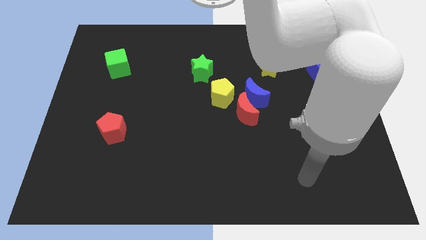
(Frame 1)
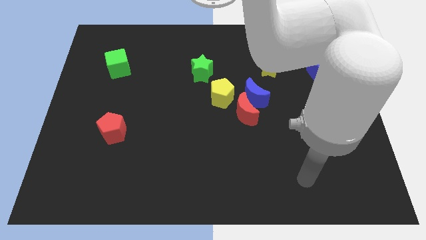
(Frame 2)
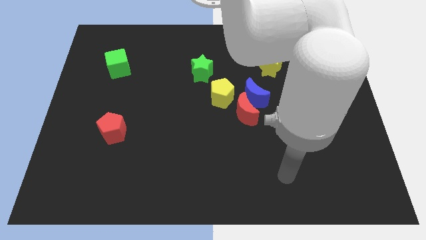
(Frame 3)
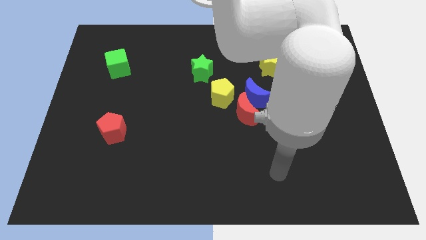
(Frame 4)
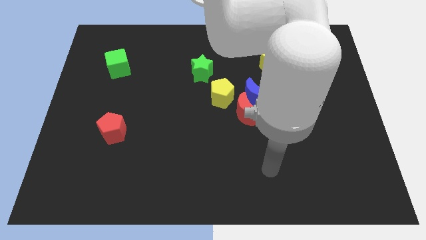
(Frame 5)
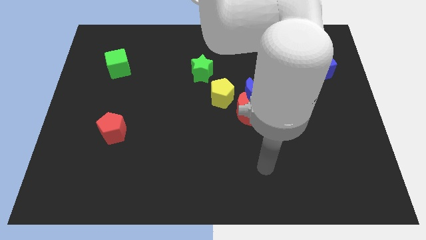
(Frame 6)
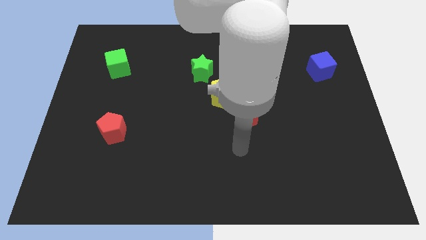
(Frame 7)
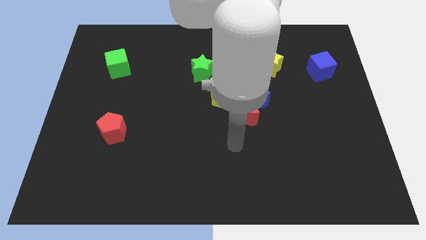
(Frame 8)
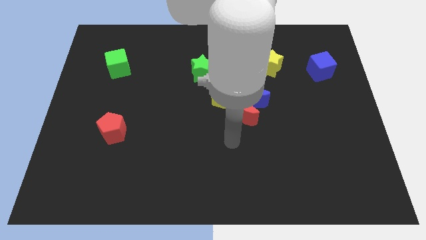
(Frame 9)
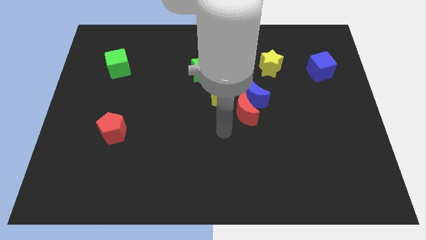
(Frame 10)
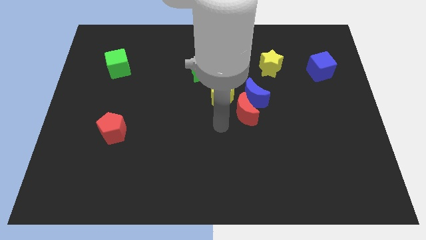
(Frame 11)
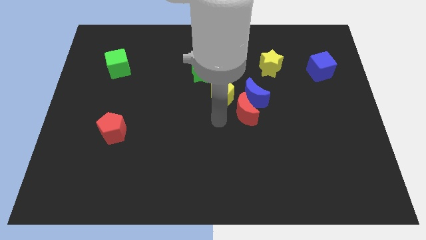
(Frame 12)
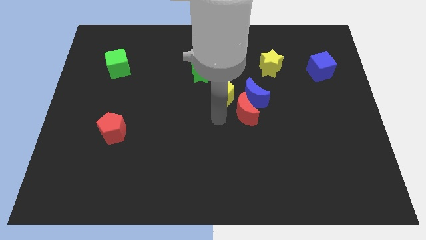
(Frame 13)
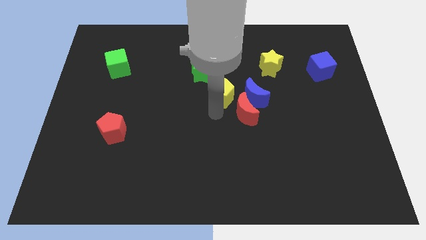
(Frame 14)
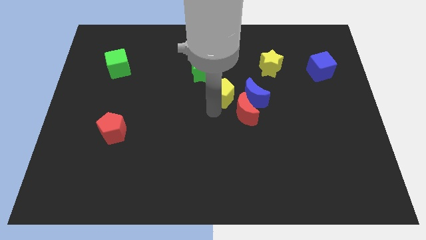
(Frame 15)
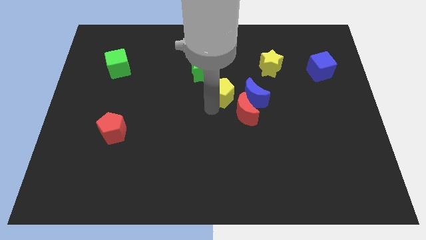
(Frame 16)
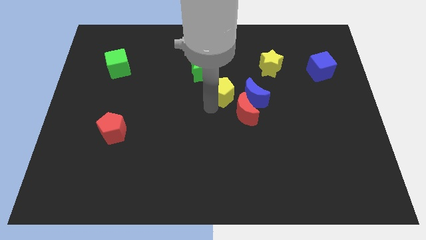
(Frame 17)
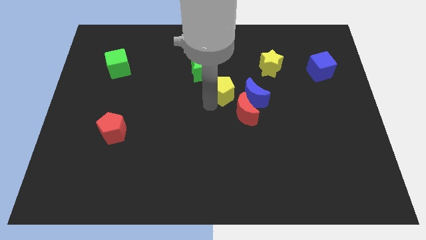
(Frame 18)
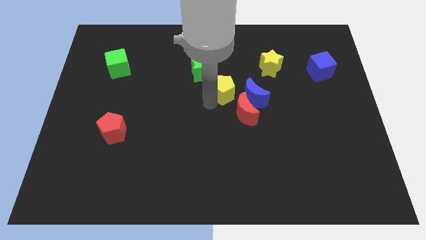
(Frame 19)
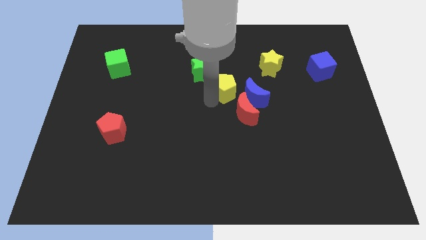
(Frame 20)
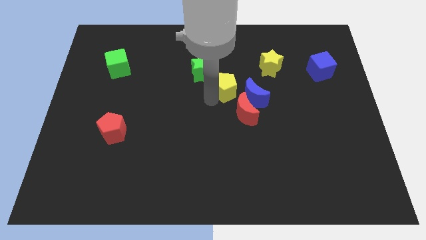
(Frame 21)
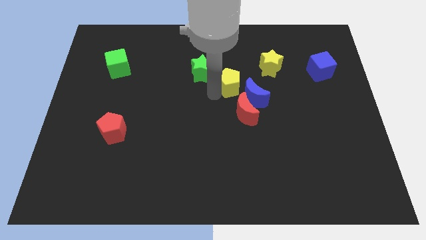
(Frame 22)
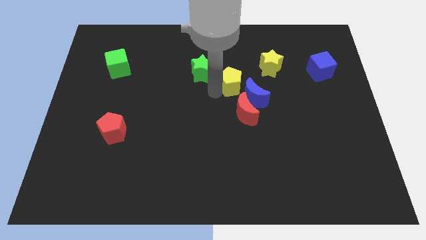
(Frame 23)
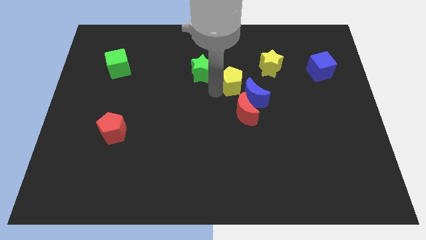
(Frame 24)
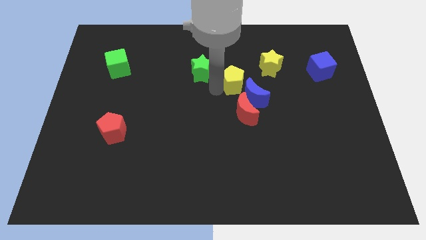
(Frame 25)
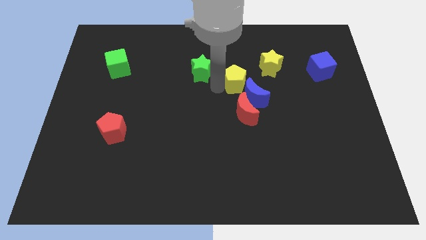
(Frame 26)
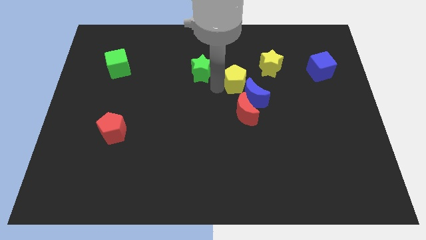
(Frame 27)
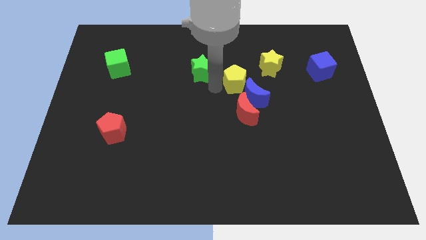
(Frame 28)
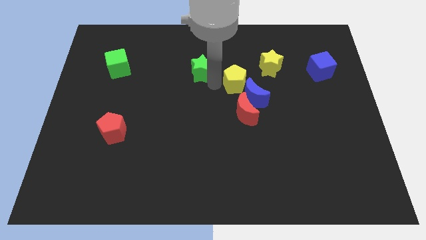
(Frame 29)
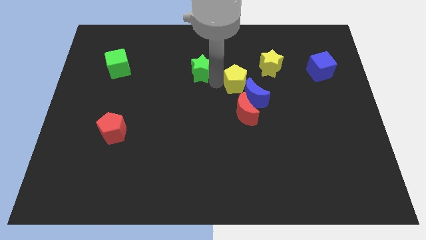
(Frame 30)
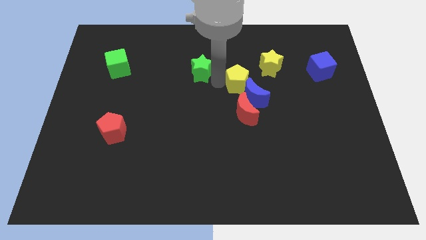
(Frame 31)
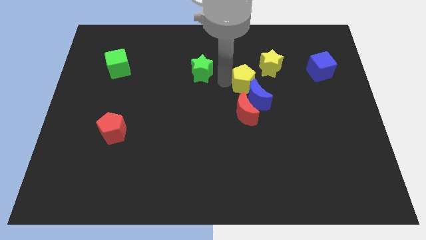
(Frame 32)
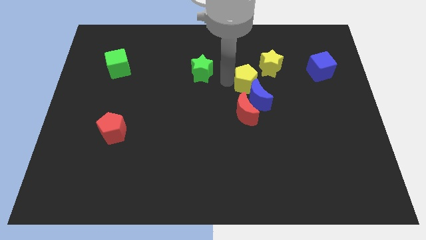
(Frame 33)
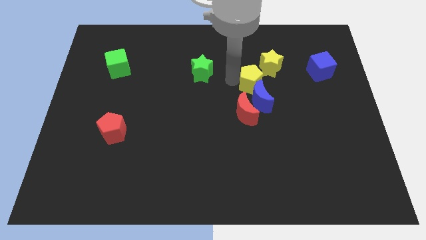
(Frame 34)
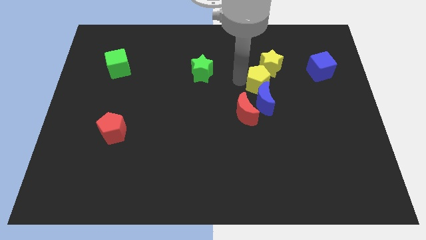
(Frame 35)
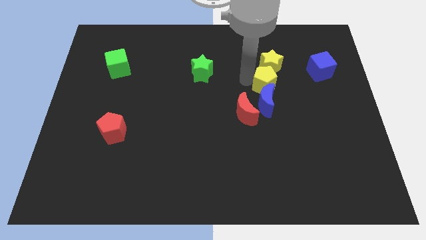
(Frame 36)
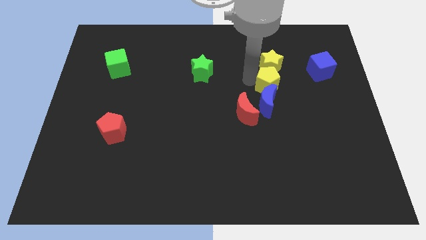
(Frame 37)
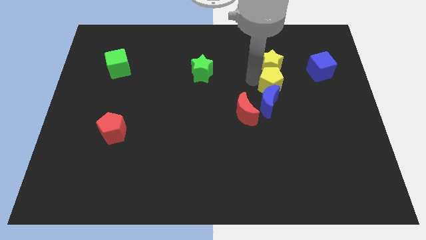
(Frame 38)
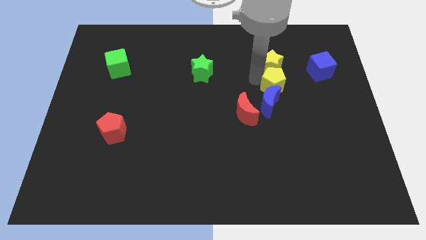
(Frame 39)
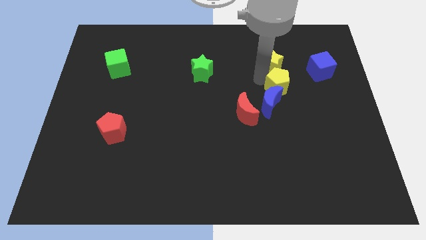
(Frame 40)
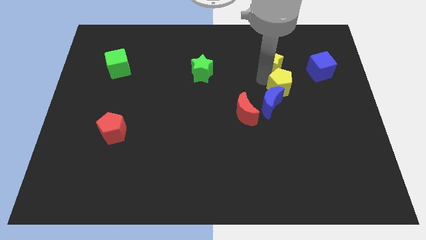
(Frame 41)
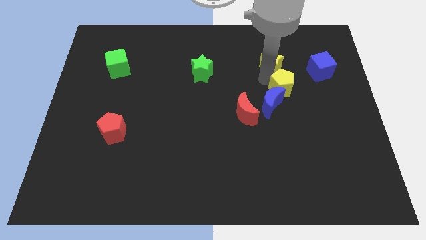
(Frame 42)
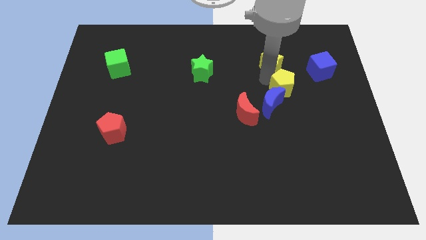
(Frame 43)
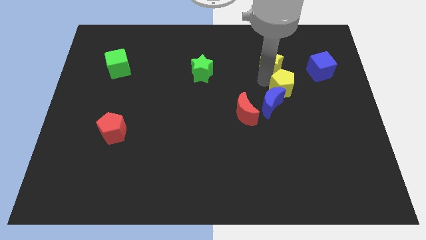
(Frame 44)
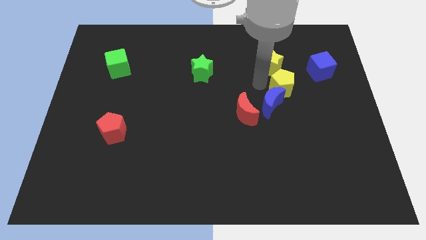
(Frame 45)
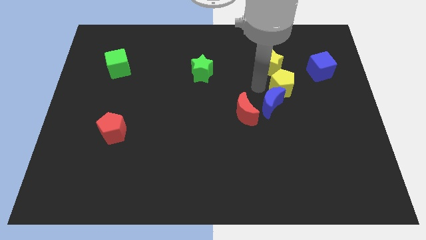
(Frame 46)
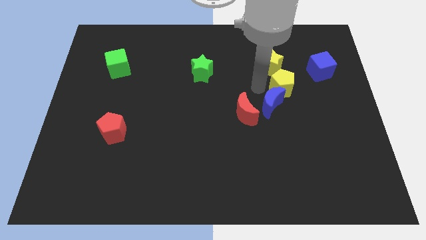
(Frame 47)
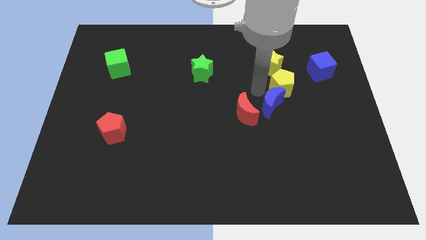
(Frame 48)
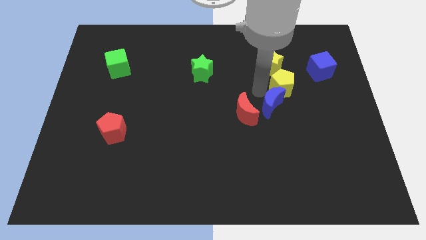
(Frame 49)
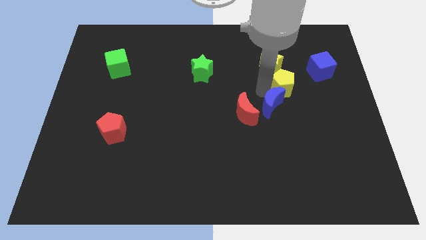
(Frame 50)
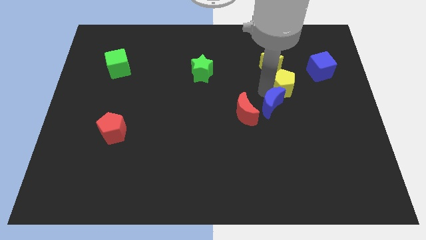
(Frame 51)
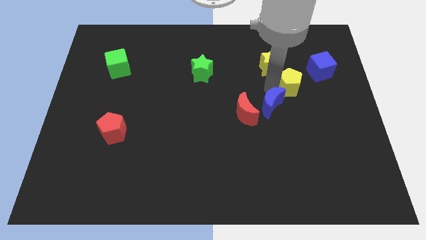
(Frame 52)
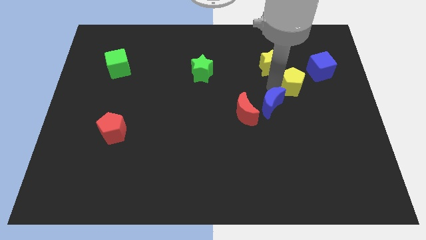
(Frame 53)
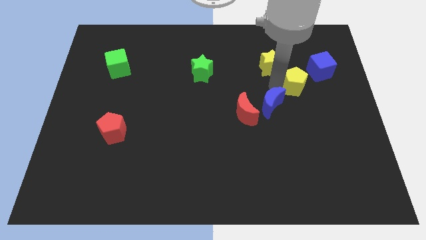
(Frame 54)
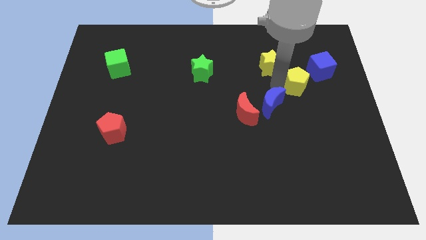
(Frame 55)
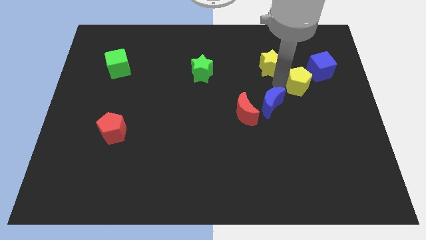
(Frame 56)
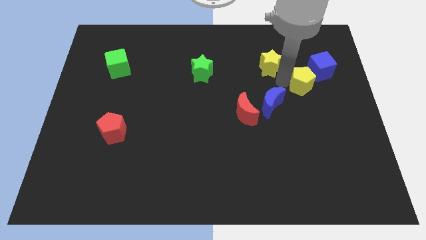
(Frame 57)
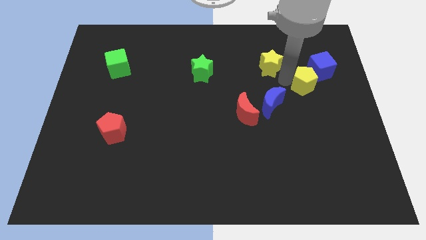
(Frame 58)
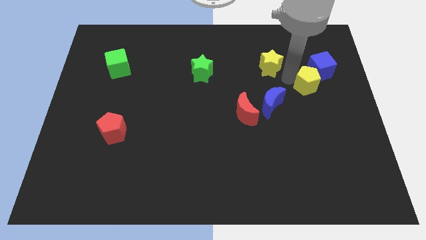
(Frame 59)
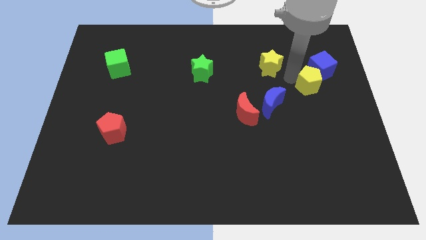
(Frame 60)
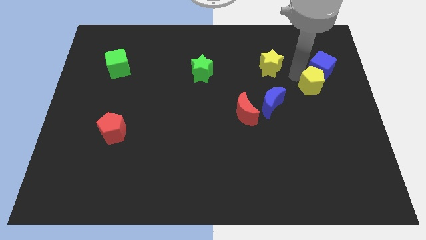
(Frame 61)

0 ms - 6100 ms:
slide the yellow pentagon close to the blue cube

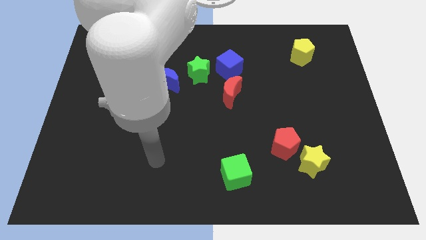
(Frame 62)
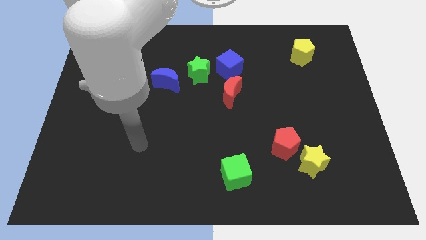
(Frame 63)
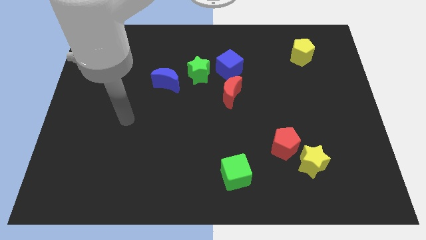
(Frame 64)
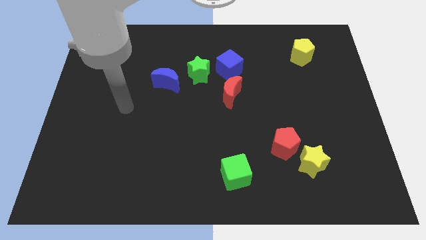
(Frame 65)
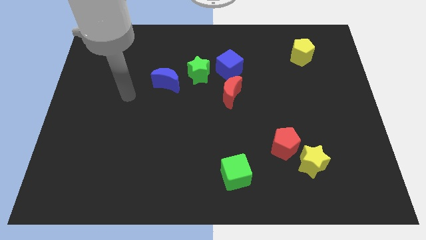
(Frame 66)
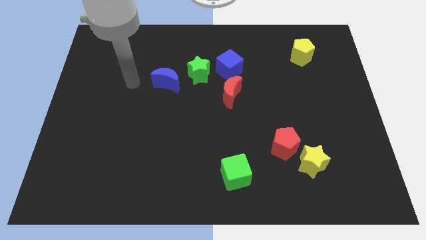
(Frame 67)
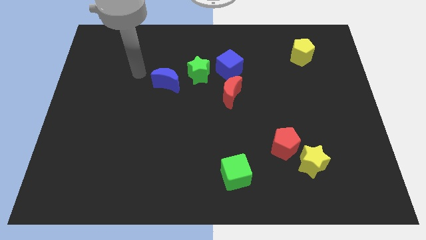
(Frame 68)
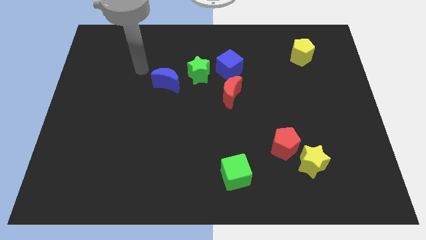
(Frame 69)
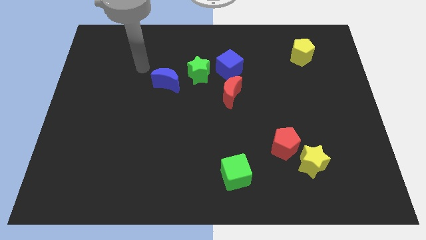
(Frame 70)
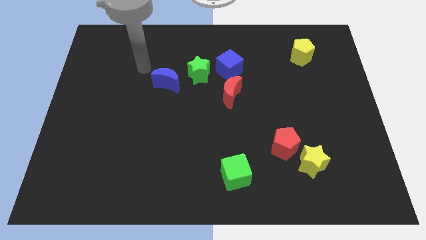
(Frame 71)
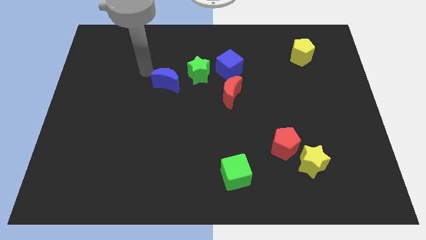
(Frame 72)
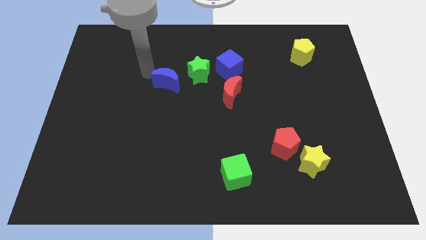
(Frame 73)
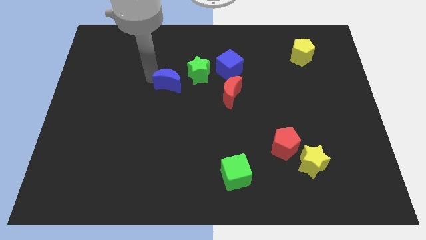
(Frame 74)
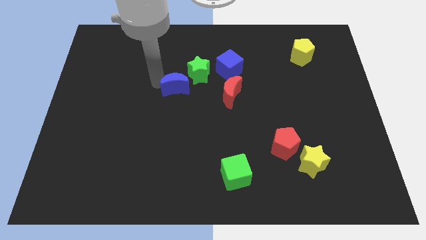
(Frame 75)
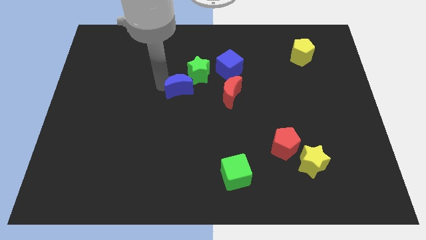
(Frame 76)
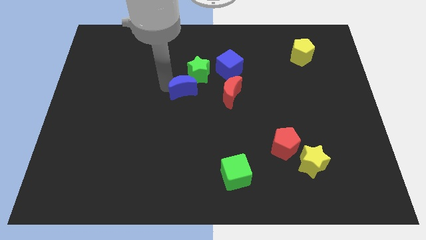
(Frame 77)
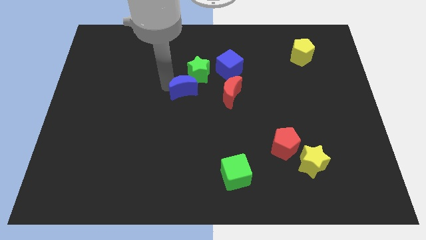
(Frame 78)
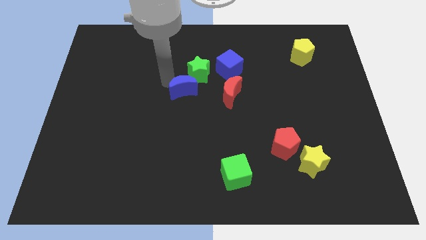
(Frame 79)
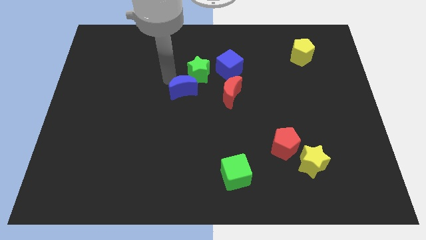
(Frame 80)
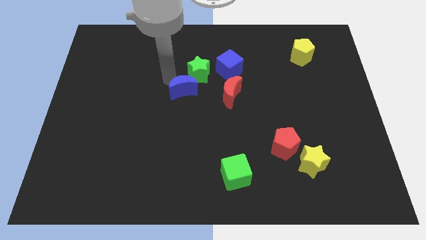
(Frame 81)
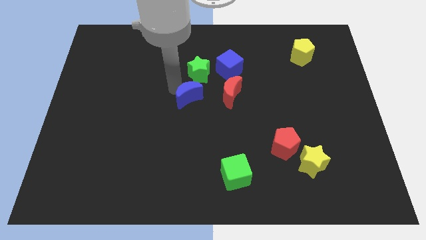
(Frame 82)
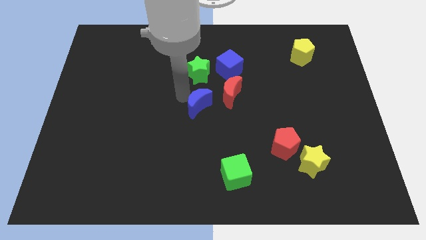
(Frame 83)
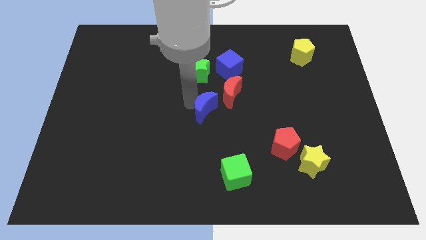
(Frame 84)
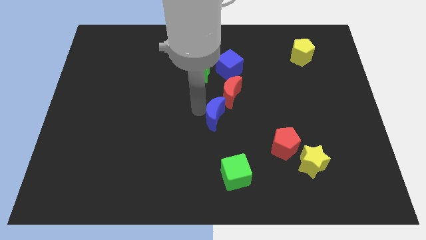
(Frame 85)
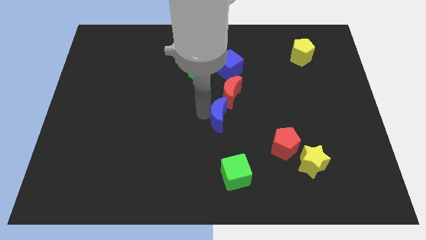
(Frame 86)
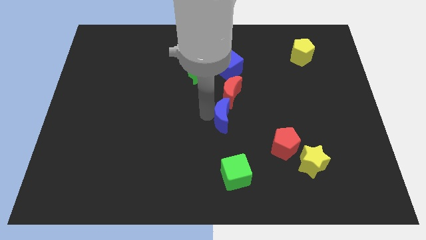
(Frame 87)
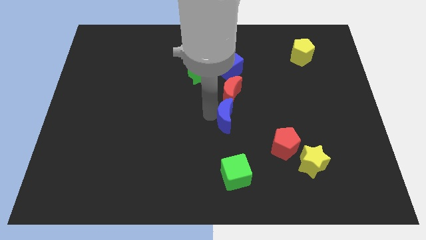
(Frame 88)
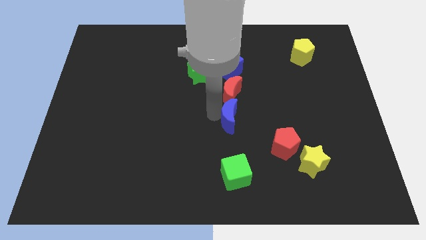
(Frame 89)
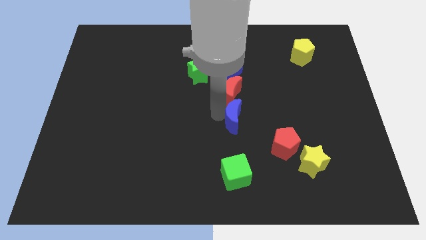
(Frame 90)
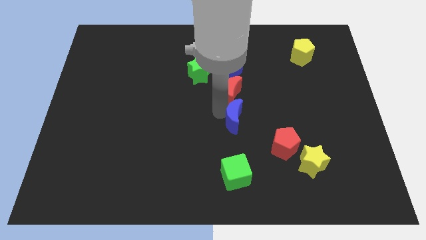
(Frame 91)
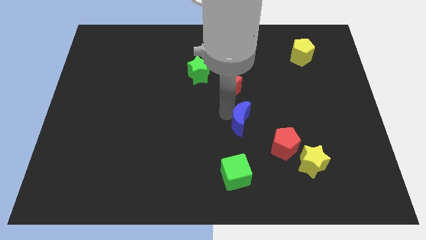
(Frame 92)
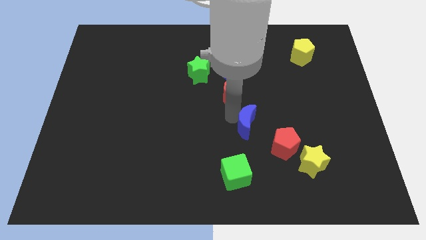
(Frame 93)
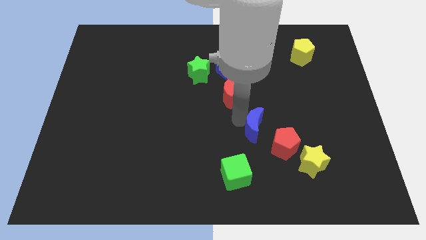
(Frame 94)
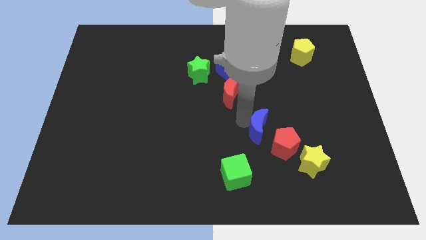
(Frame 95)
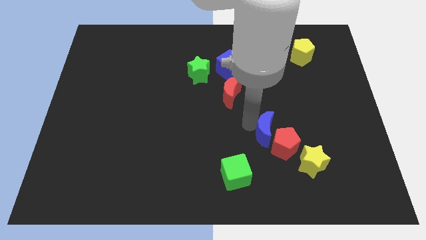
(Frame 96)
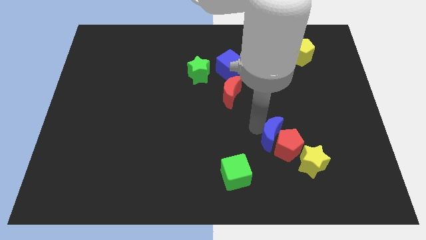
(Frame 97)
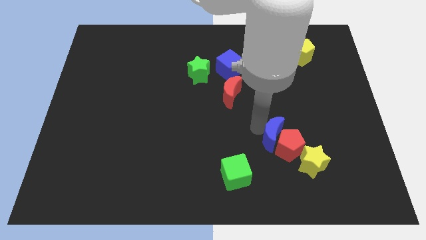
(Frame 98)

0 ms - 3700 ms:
push the blue moon to the red pentagon
